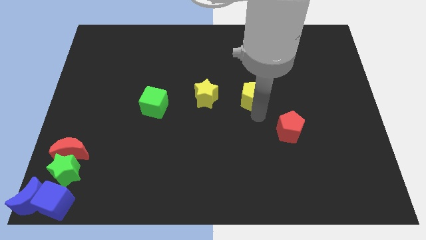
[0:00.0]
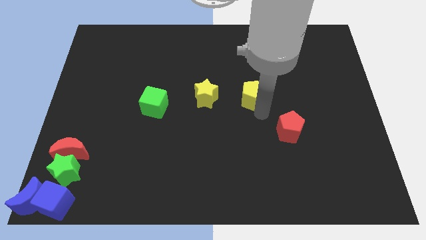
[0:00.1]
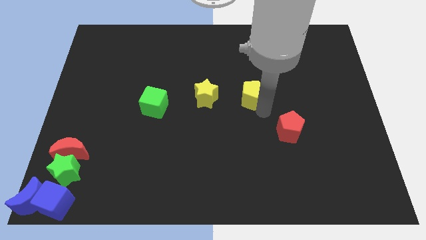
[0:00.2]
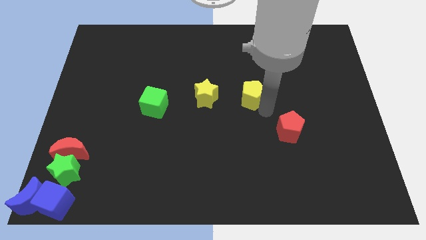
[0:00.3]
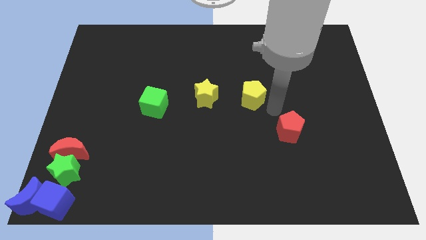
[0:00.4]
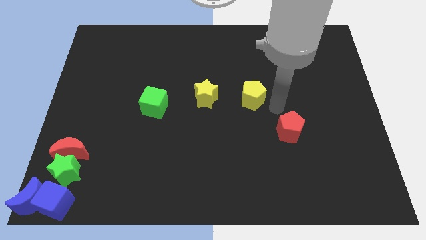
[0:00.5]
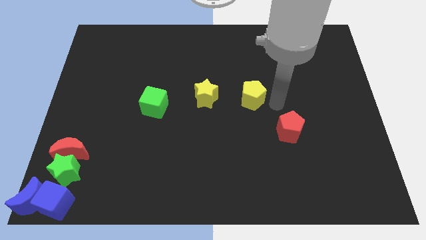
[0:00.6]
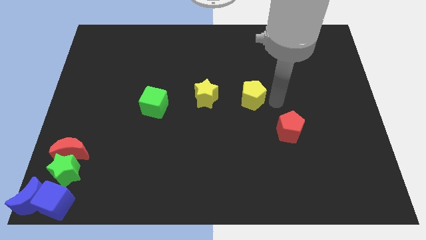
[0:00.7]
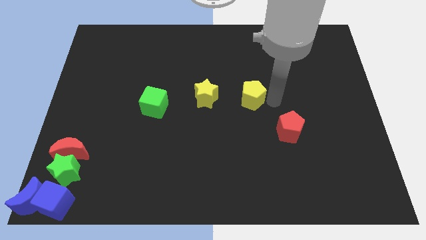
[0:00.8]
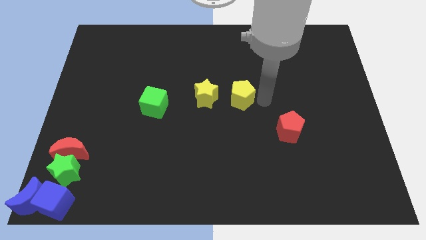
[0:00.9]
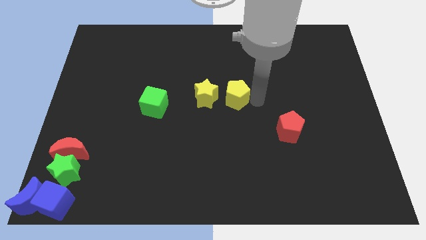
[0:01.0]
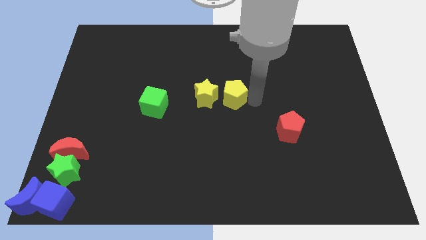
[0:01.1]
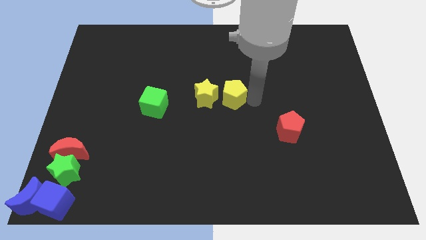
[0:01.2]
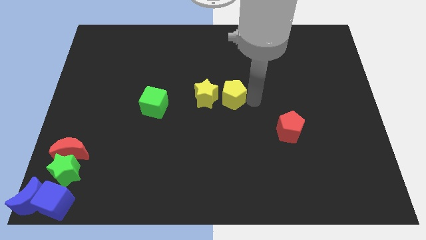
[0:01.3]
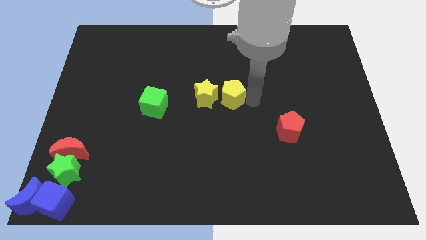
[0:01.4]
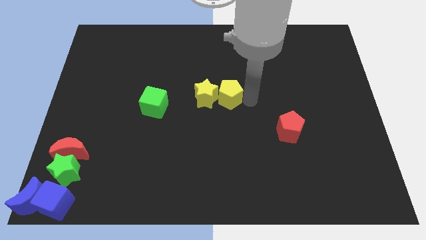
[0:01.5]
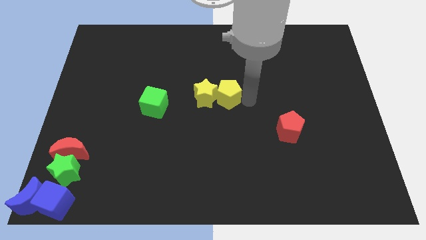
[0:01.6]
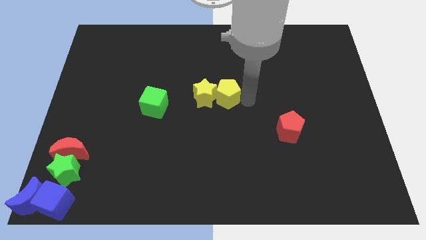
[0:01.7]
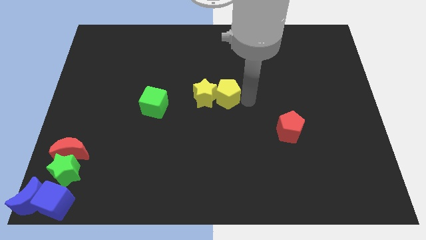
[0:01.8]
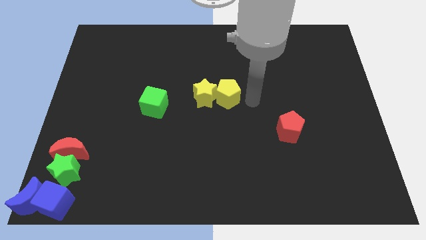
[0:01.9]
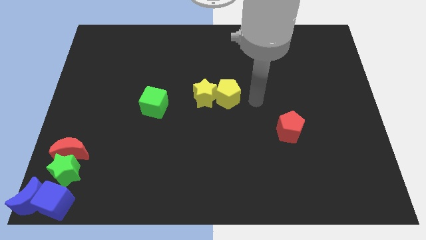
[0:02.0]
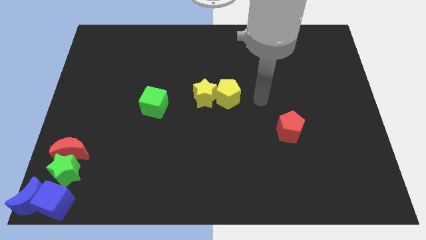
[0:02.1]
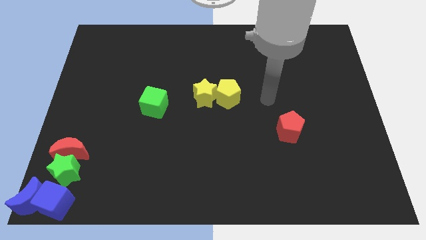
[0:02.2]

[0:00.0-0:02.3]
push the yellow pentagon into the yellow star

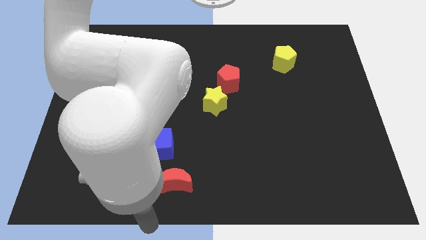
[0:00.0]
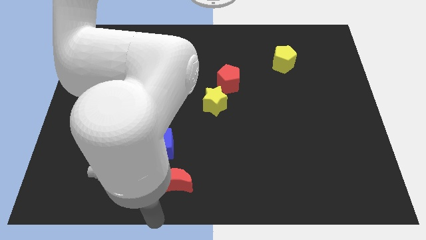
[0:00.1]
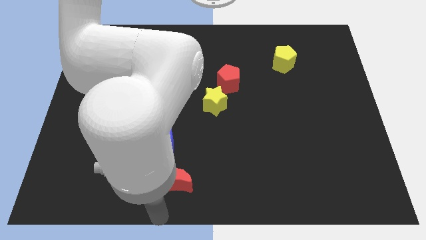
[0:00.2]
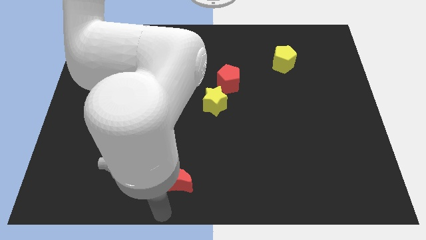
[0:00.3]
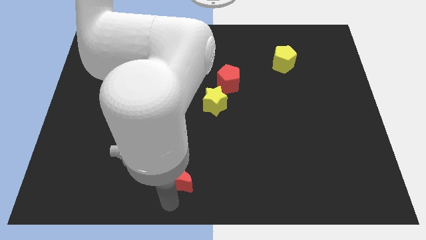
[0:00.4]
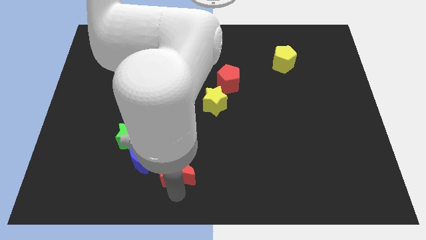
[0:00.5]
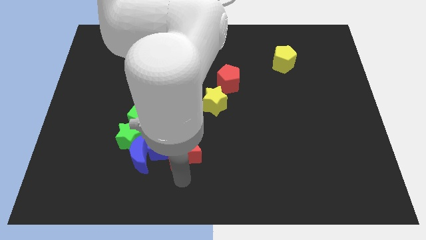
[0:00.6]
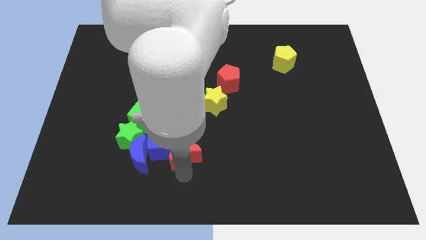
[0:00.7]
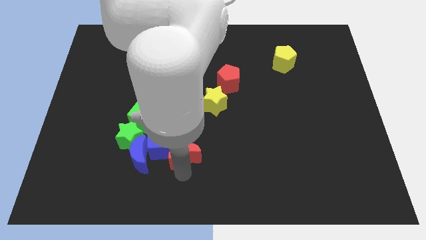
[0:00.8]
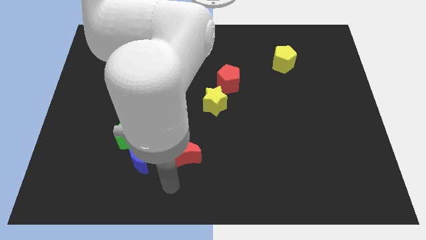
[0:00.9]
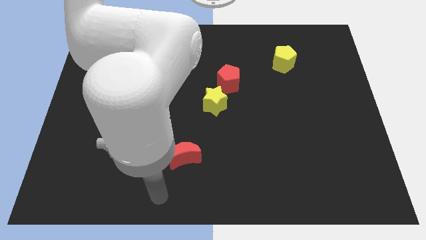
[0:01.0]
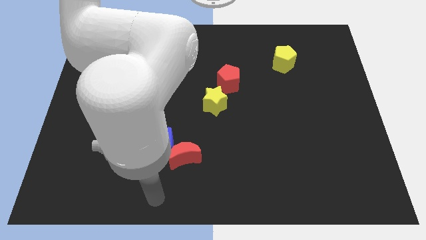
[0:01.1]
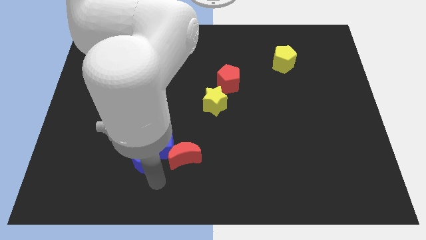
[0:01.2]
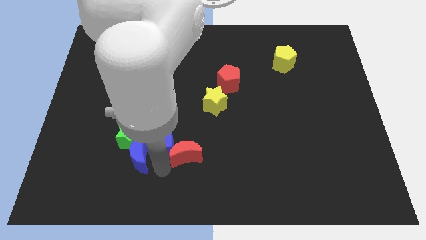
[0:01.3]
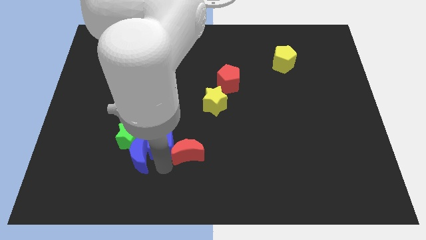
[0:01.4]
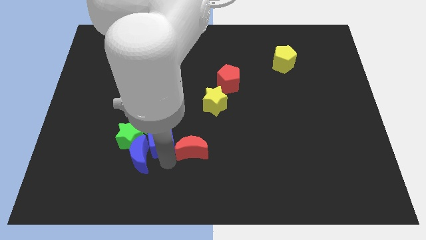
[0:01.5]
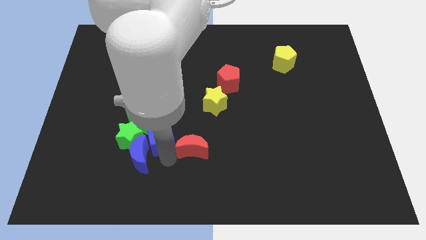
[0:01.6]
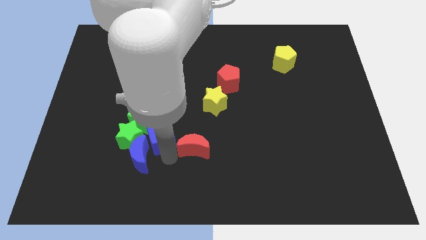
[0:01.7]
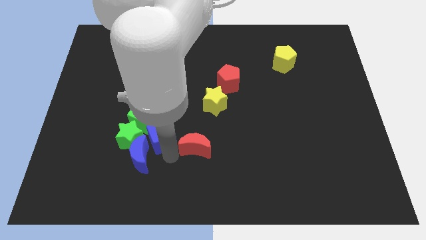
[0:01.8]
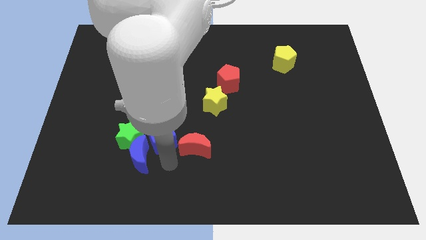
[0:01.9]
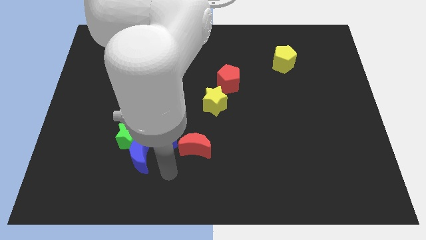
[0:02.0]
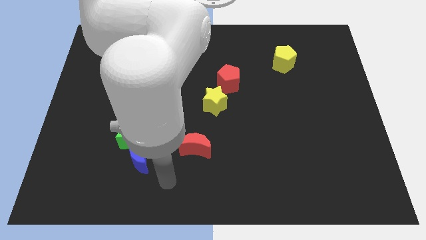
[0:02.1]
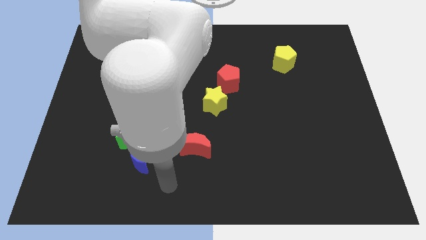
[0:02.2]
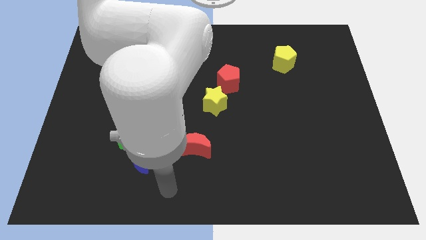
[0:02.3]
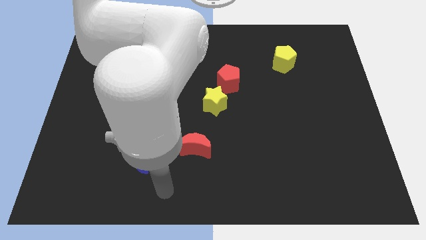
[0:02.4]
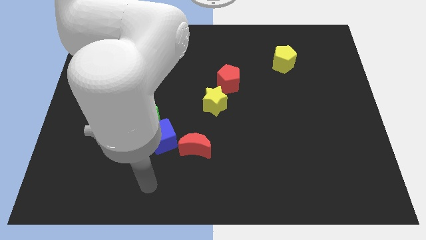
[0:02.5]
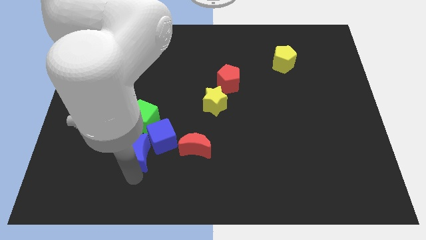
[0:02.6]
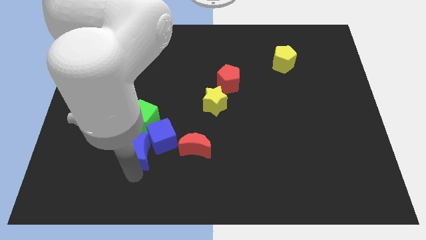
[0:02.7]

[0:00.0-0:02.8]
push red crescent to the right of blue cube

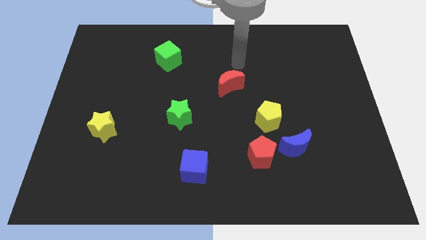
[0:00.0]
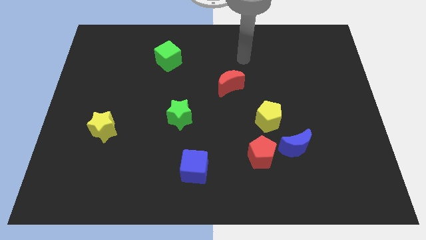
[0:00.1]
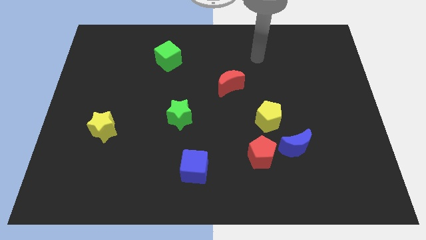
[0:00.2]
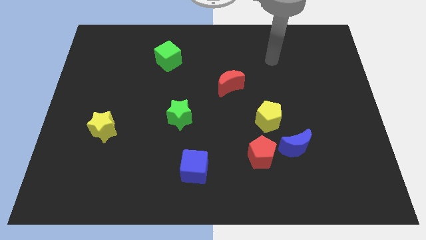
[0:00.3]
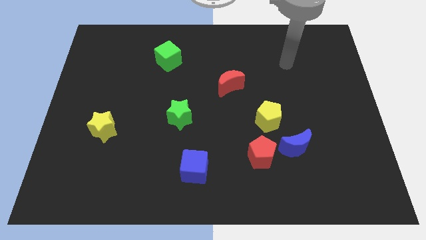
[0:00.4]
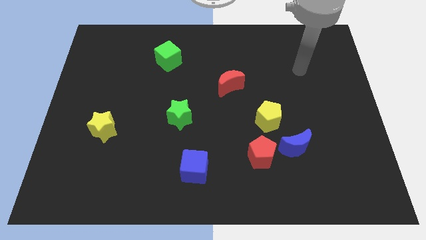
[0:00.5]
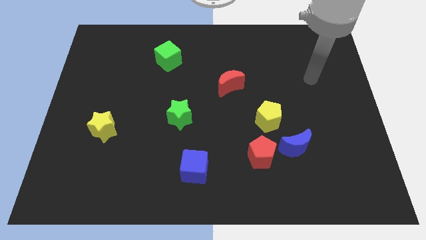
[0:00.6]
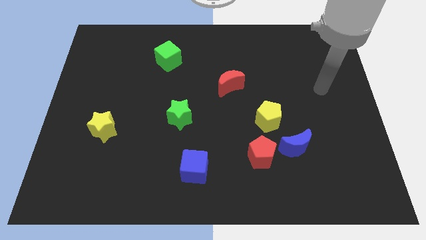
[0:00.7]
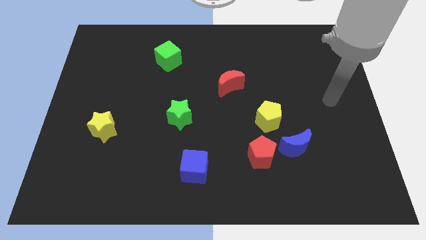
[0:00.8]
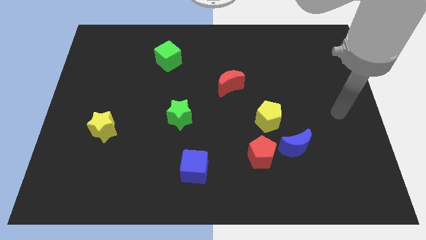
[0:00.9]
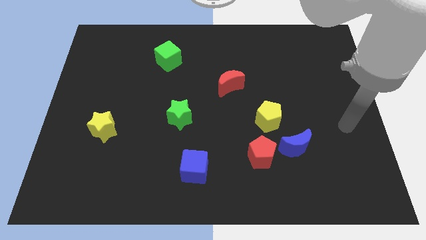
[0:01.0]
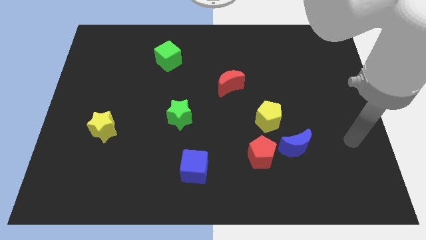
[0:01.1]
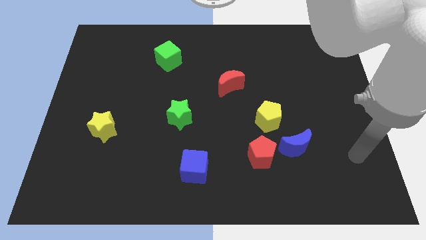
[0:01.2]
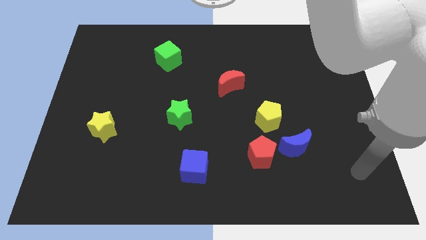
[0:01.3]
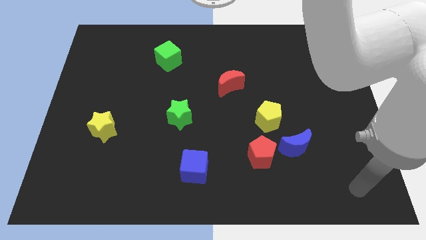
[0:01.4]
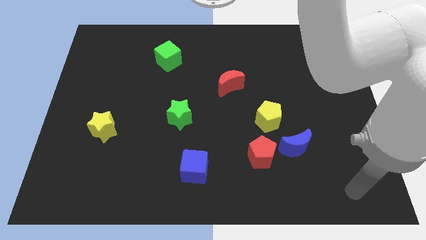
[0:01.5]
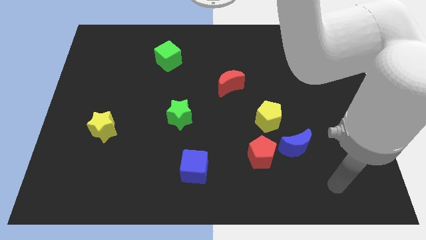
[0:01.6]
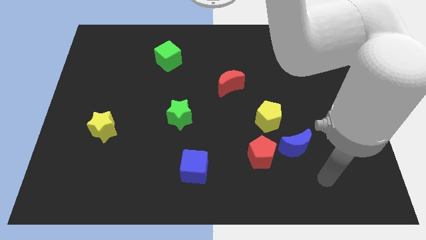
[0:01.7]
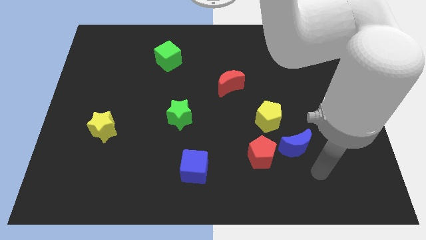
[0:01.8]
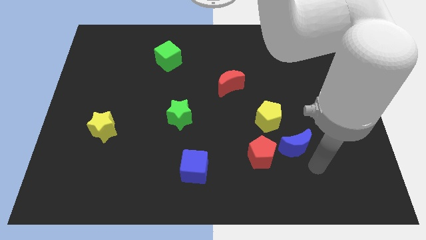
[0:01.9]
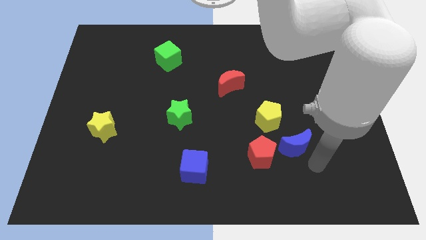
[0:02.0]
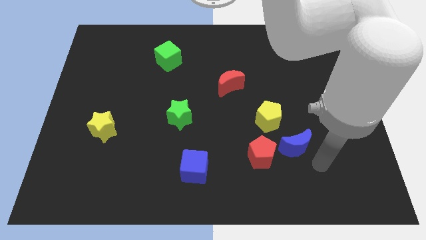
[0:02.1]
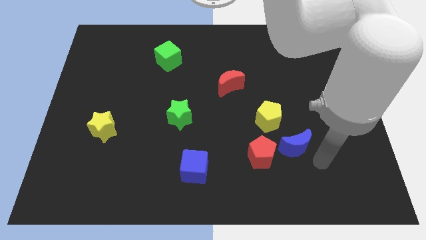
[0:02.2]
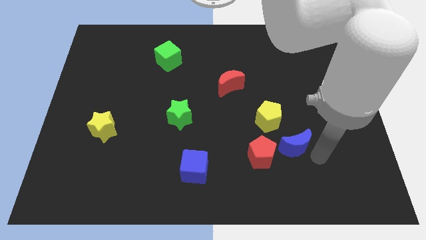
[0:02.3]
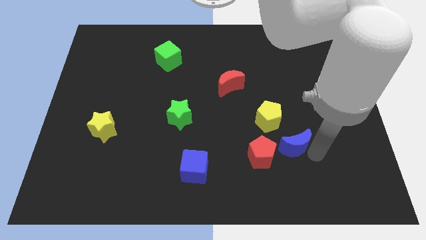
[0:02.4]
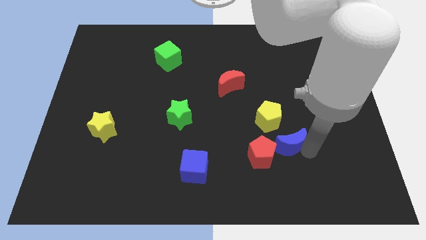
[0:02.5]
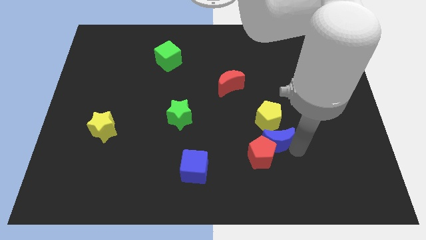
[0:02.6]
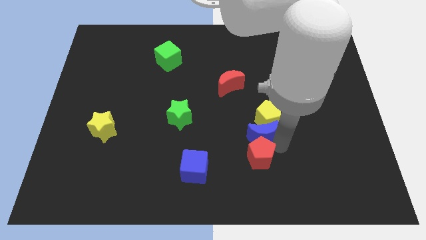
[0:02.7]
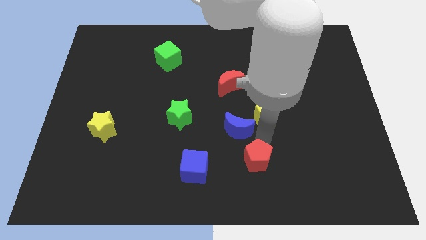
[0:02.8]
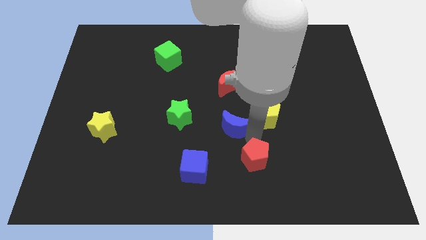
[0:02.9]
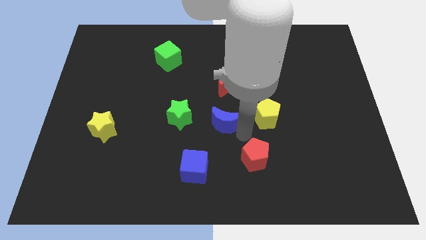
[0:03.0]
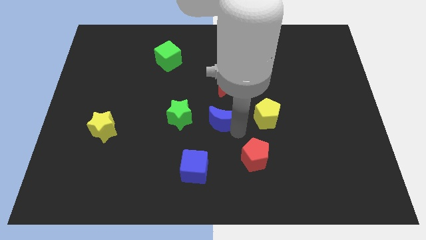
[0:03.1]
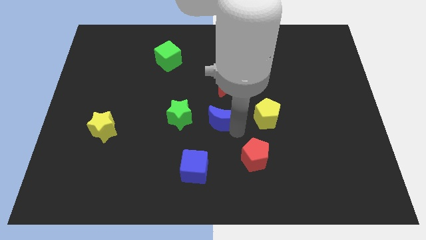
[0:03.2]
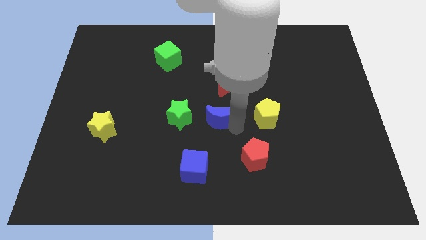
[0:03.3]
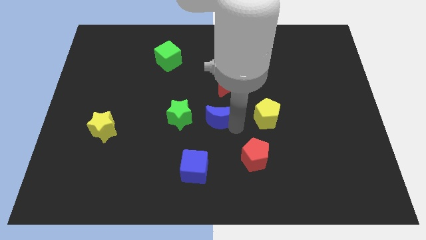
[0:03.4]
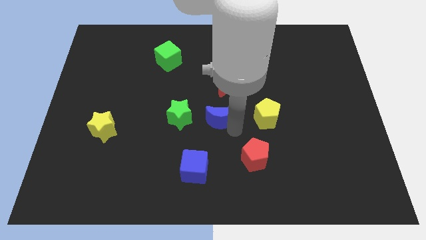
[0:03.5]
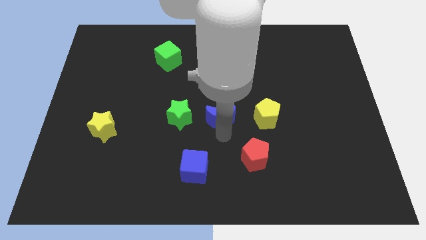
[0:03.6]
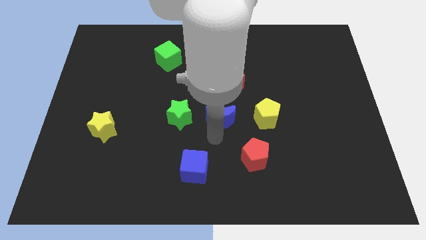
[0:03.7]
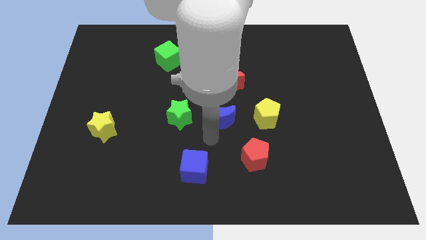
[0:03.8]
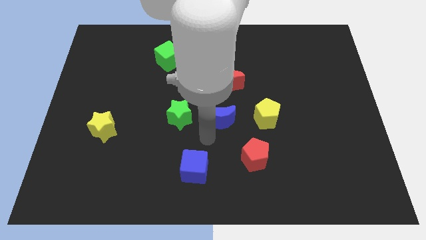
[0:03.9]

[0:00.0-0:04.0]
push the blue crescent into the yellow pentagon
